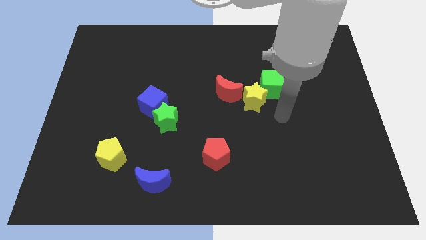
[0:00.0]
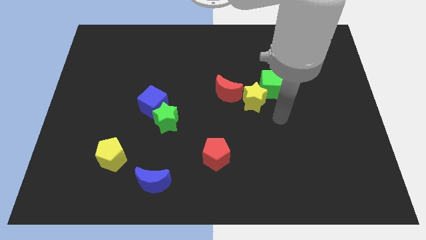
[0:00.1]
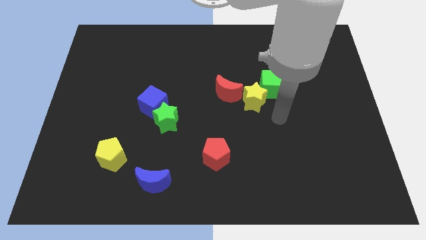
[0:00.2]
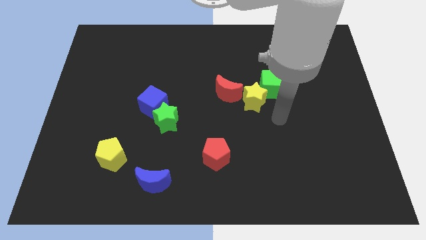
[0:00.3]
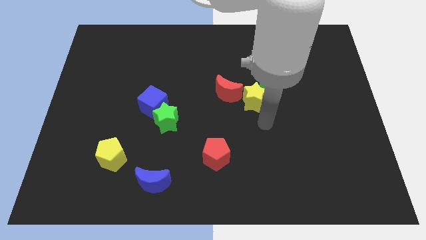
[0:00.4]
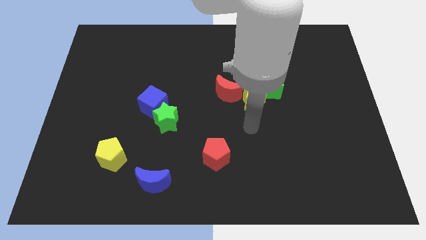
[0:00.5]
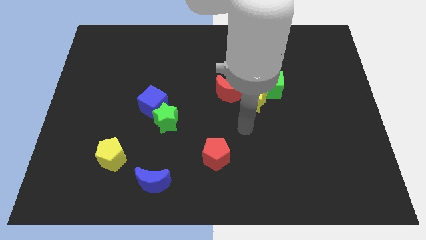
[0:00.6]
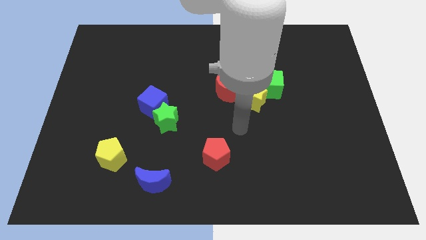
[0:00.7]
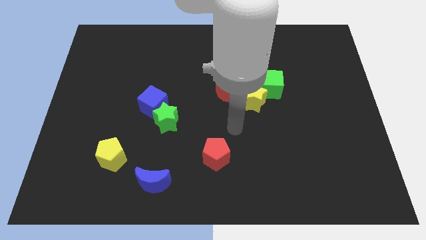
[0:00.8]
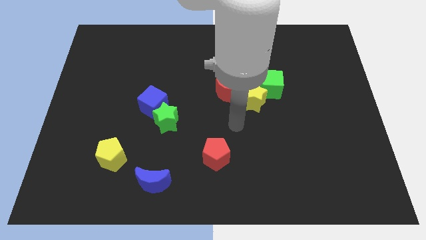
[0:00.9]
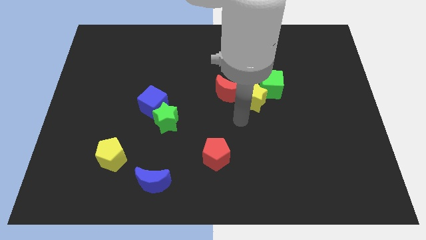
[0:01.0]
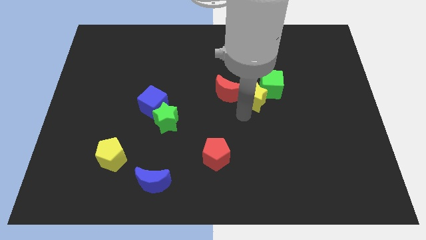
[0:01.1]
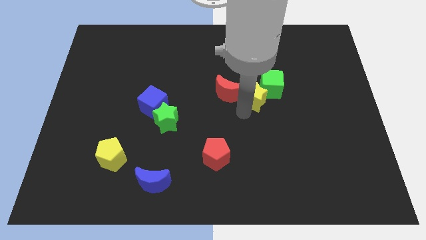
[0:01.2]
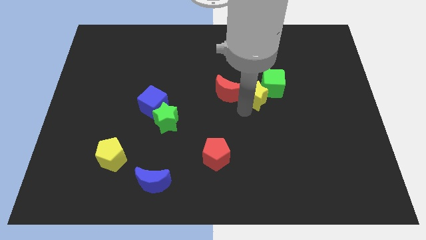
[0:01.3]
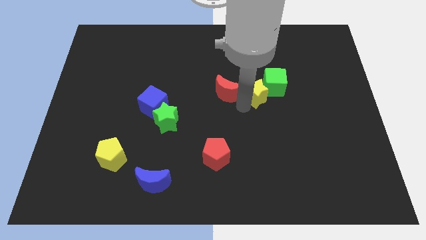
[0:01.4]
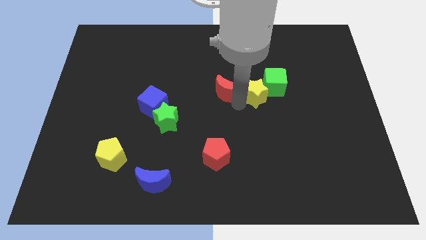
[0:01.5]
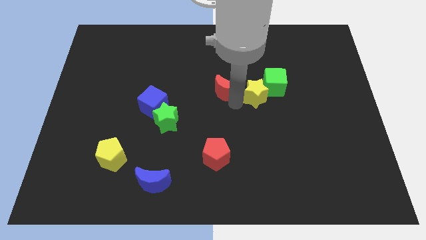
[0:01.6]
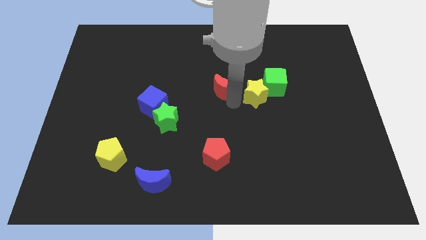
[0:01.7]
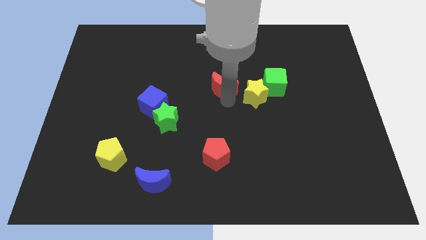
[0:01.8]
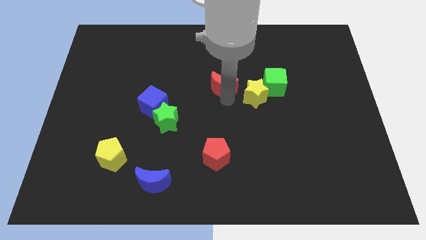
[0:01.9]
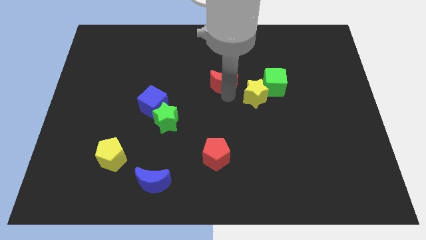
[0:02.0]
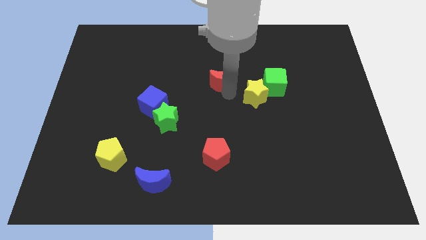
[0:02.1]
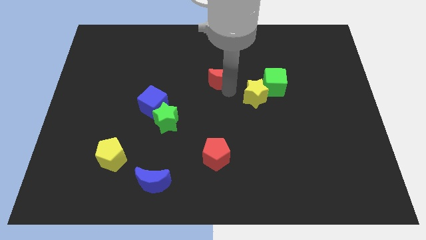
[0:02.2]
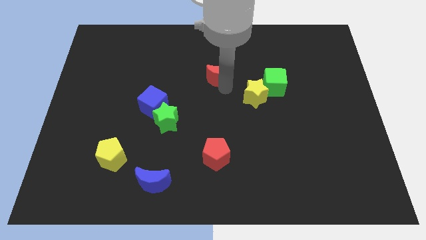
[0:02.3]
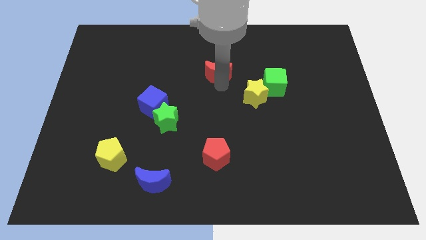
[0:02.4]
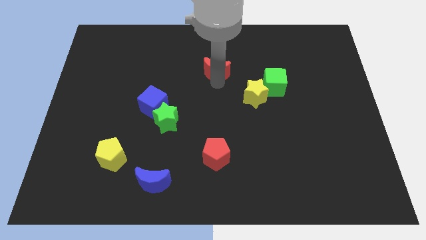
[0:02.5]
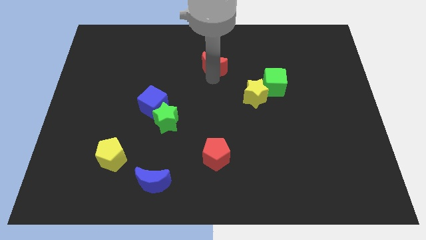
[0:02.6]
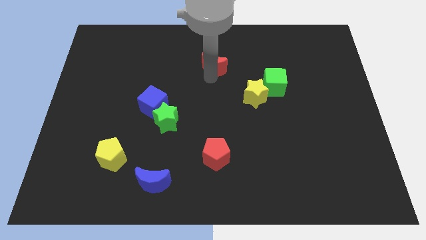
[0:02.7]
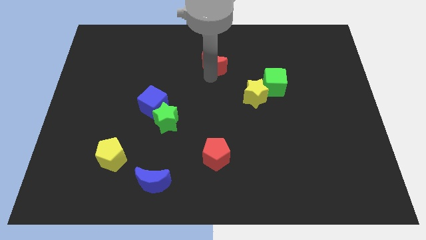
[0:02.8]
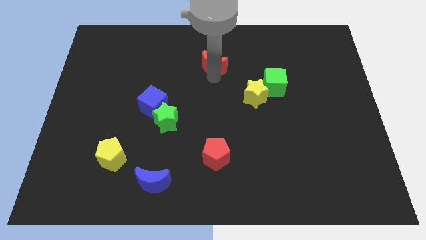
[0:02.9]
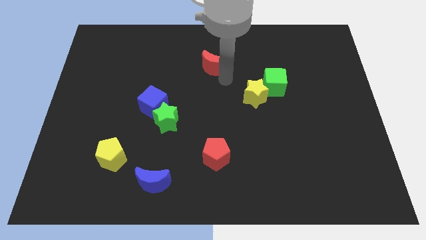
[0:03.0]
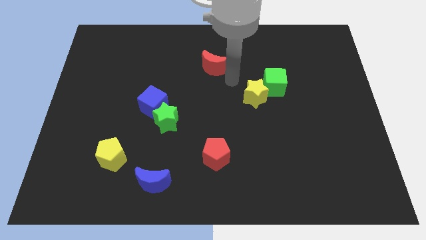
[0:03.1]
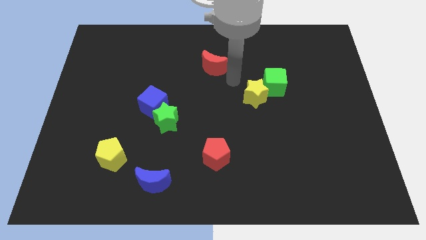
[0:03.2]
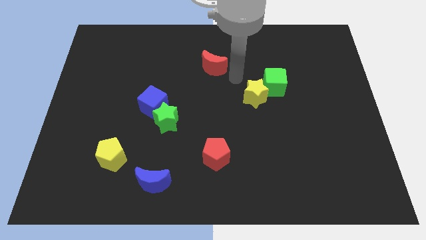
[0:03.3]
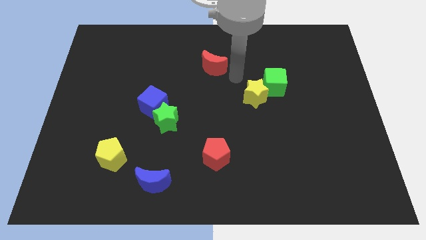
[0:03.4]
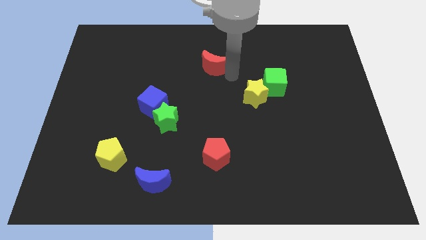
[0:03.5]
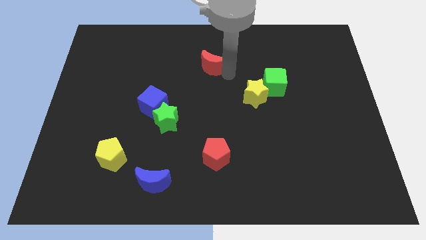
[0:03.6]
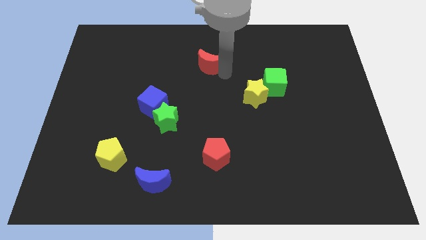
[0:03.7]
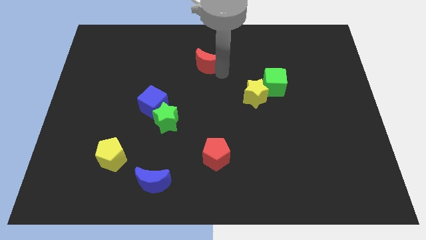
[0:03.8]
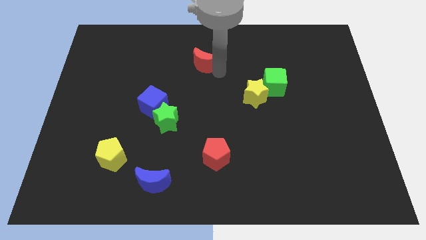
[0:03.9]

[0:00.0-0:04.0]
place the red moon diagonally top left to the yellow star

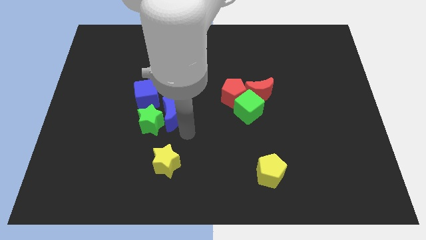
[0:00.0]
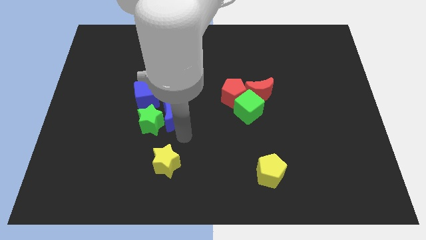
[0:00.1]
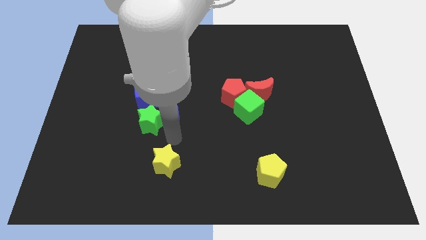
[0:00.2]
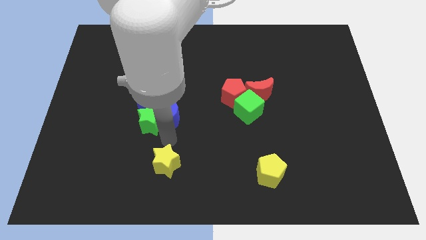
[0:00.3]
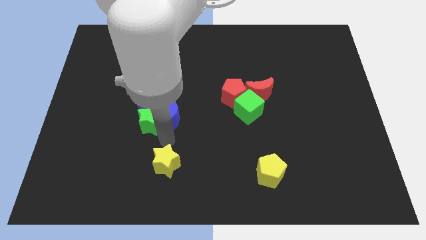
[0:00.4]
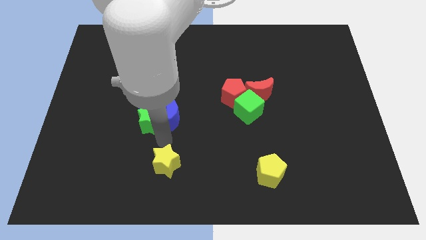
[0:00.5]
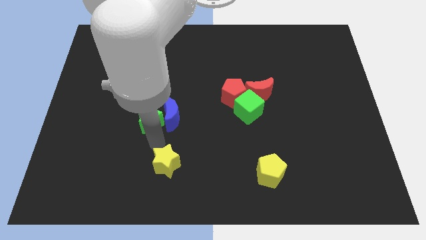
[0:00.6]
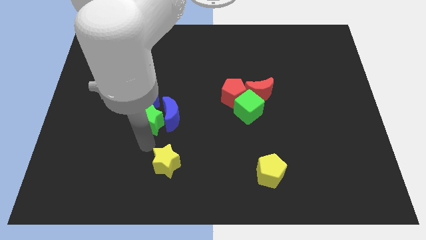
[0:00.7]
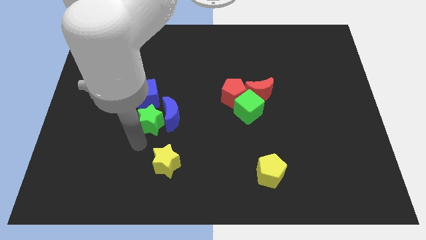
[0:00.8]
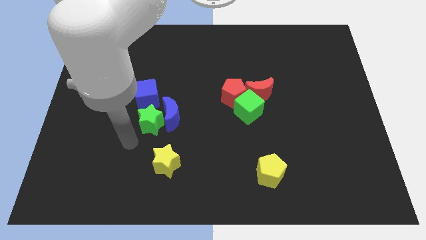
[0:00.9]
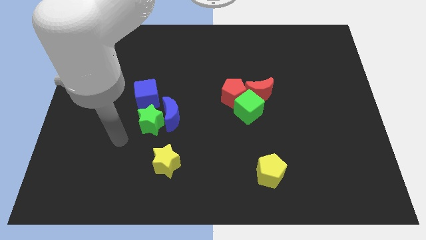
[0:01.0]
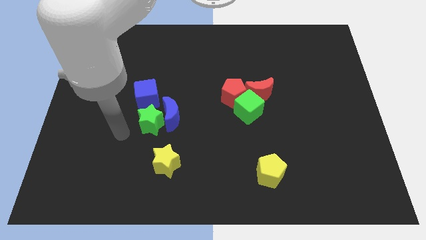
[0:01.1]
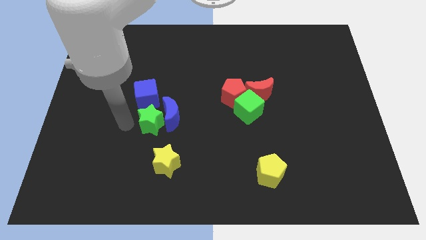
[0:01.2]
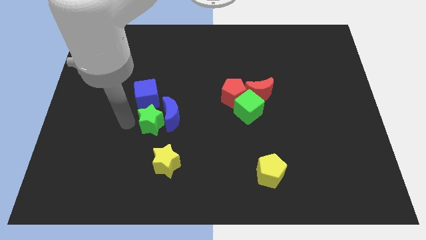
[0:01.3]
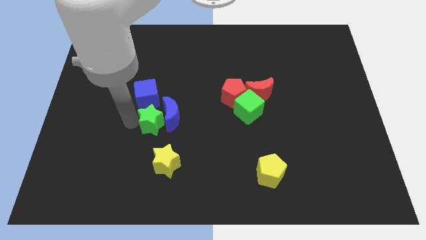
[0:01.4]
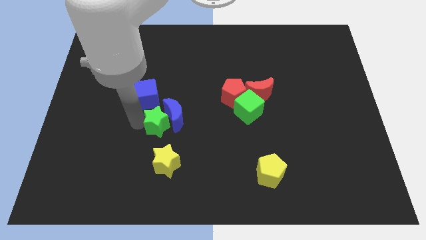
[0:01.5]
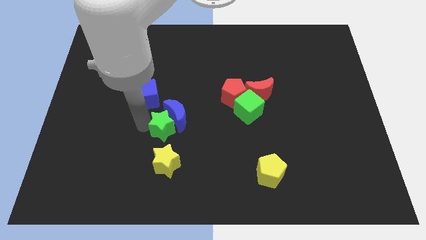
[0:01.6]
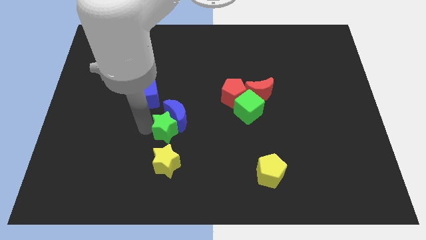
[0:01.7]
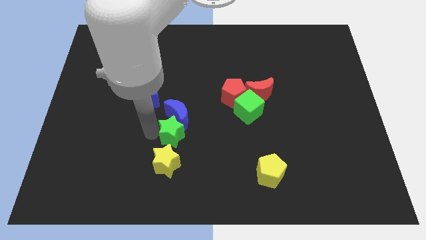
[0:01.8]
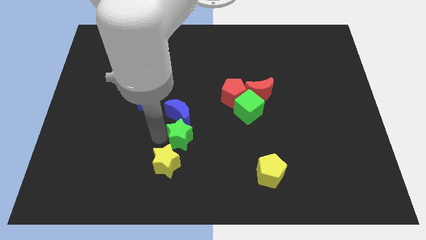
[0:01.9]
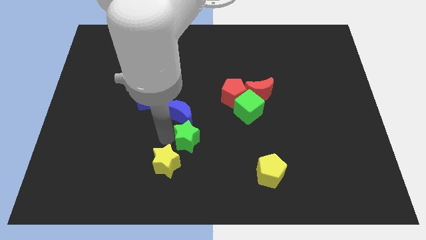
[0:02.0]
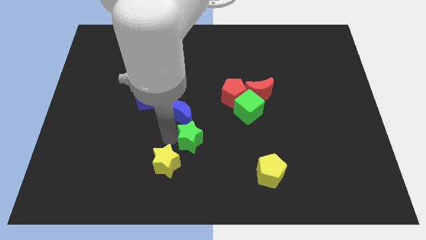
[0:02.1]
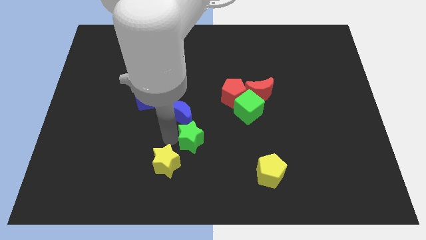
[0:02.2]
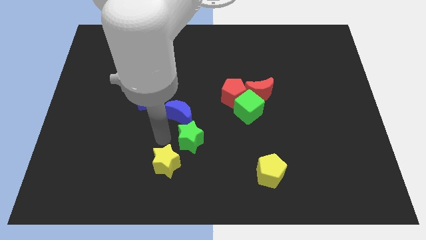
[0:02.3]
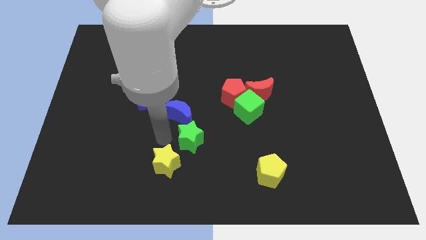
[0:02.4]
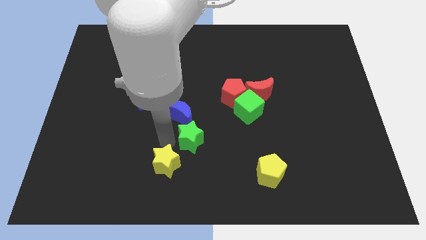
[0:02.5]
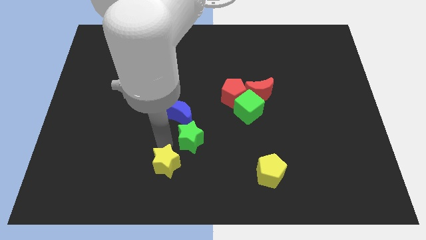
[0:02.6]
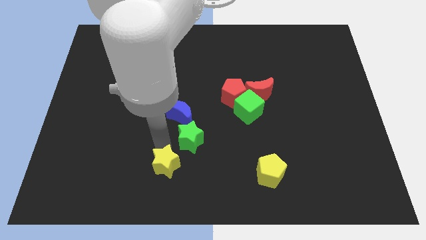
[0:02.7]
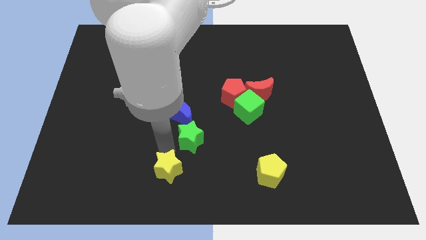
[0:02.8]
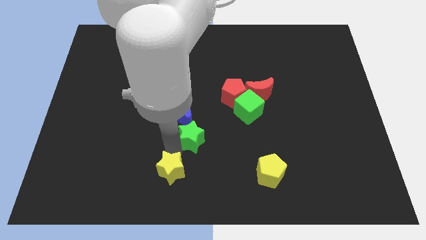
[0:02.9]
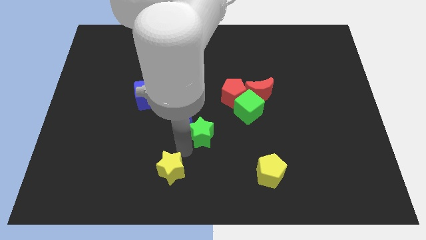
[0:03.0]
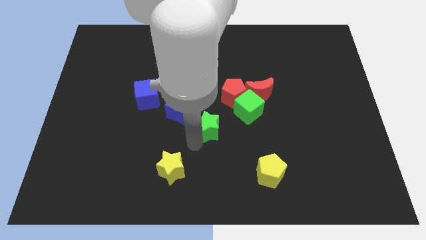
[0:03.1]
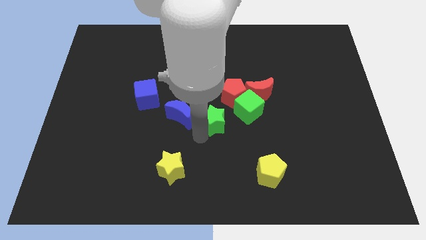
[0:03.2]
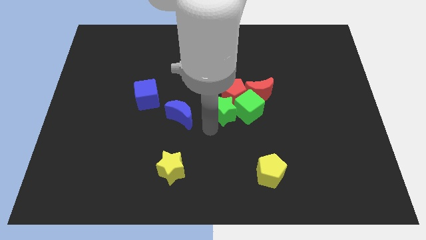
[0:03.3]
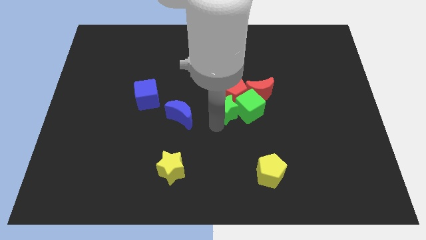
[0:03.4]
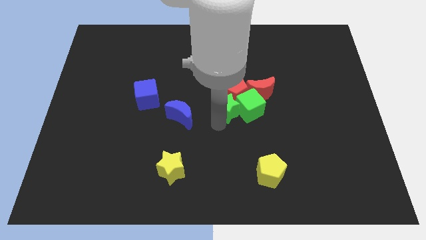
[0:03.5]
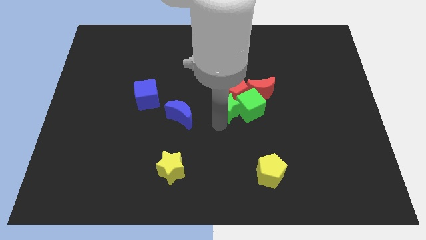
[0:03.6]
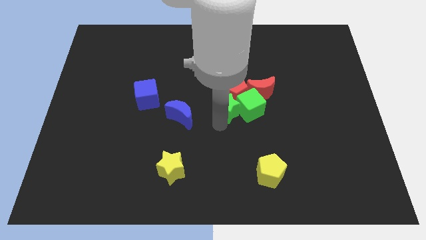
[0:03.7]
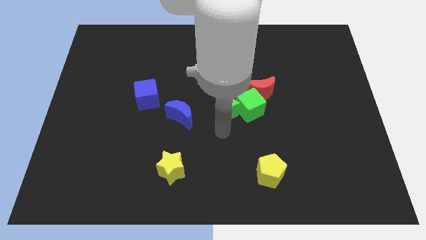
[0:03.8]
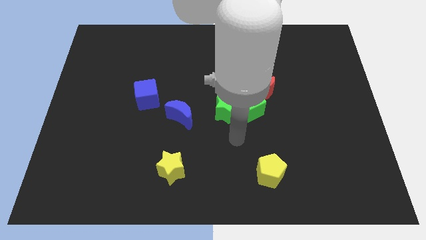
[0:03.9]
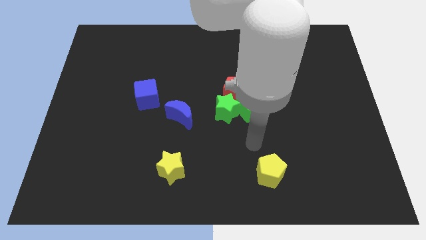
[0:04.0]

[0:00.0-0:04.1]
push the green star into the green cube

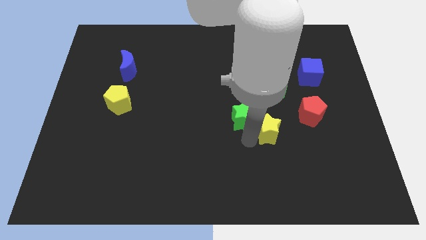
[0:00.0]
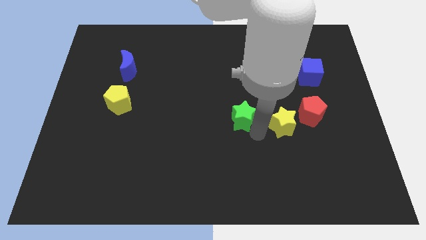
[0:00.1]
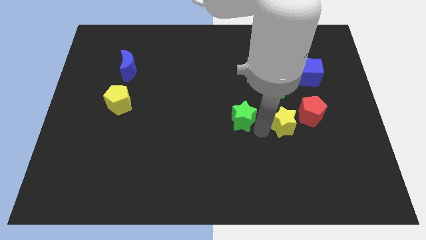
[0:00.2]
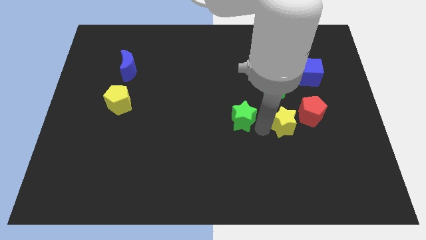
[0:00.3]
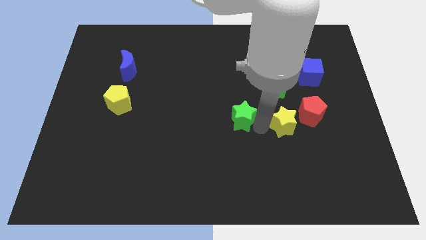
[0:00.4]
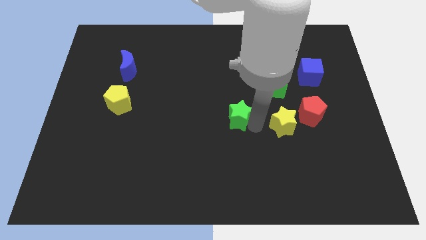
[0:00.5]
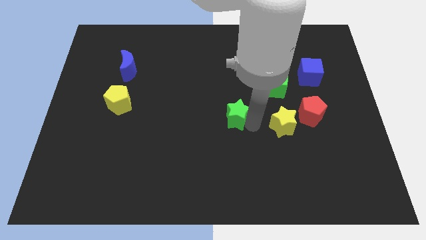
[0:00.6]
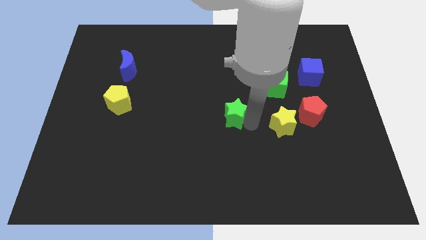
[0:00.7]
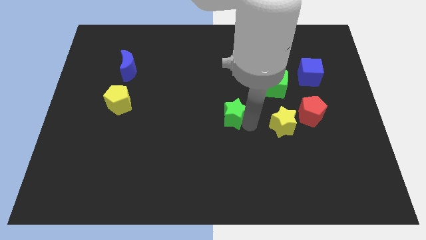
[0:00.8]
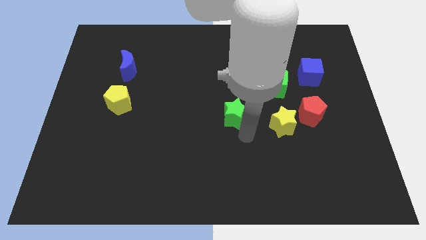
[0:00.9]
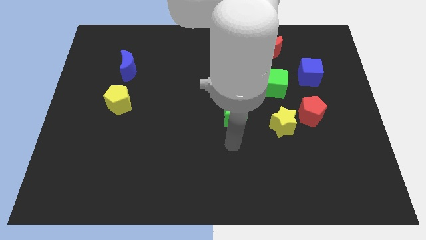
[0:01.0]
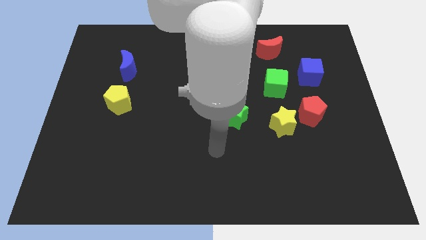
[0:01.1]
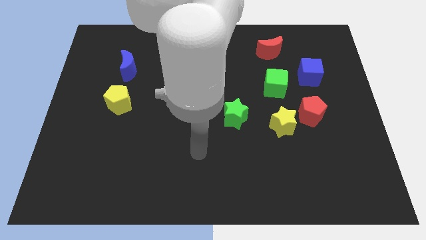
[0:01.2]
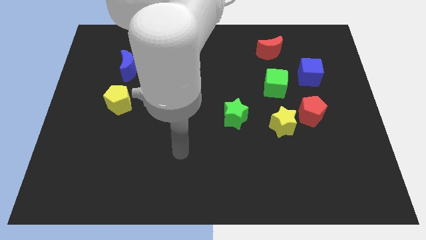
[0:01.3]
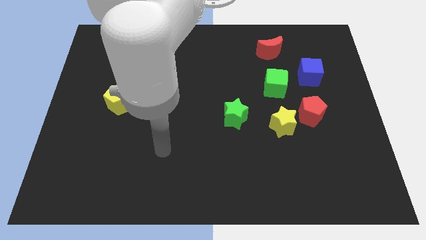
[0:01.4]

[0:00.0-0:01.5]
move green star away from the yellow star
